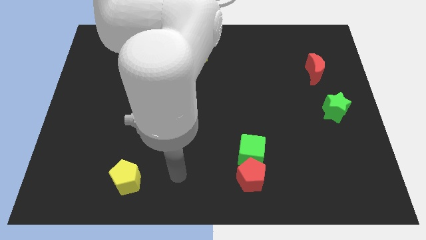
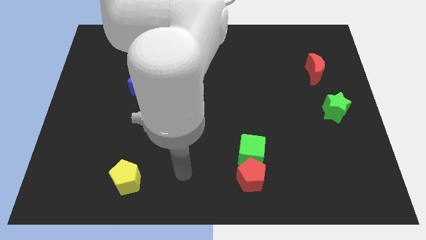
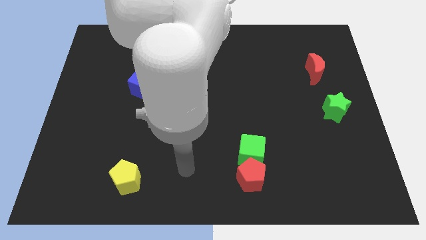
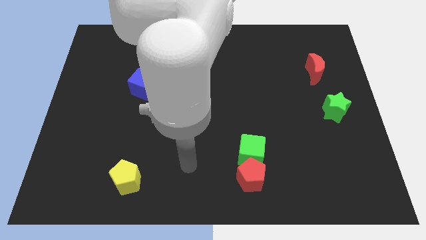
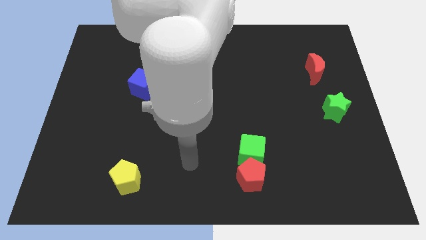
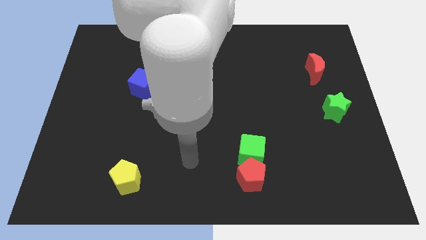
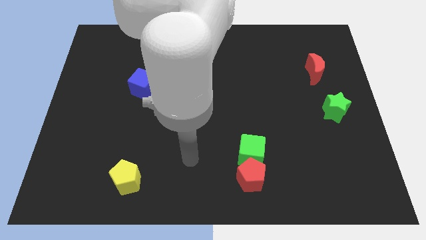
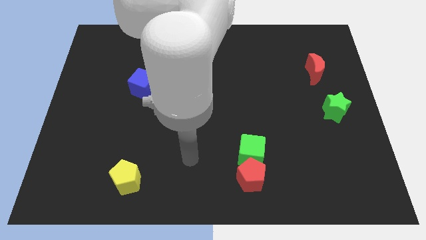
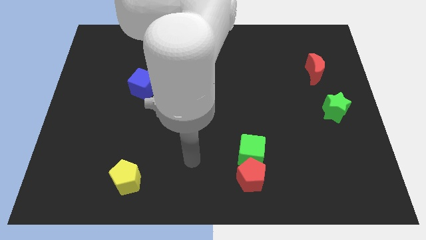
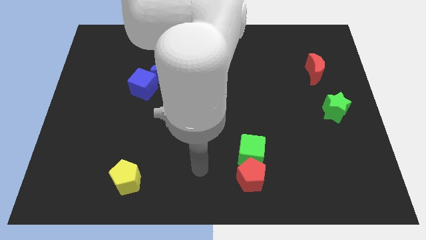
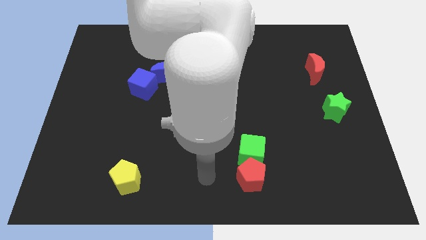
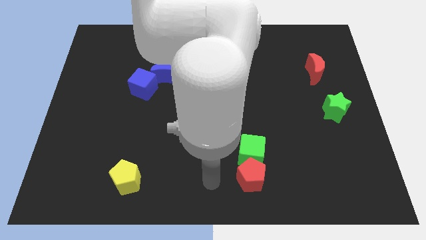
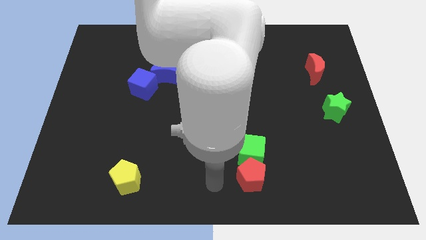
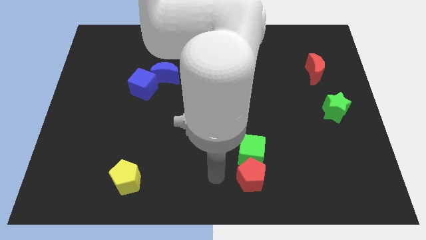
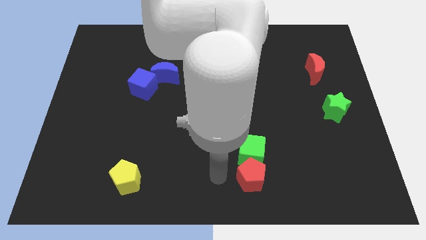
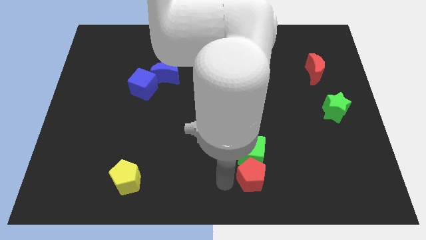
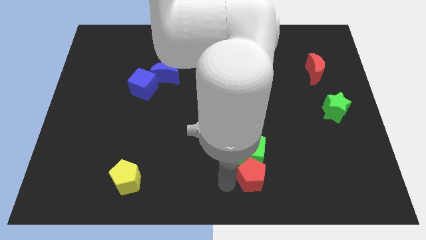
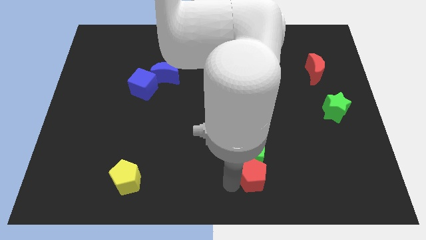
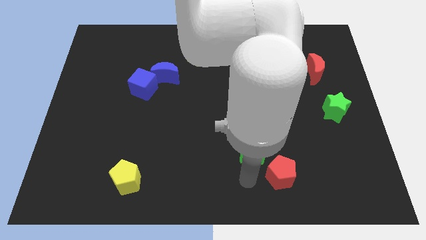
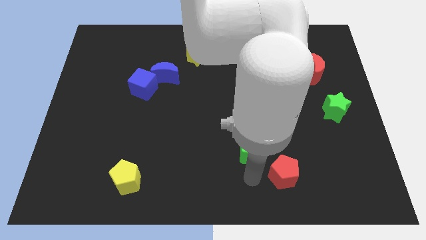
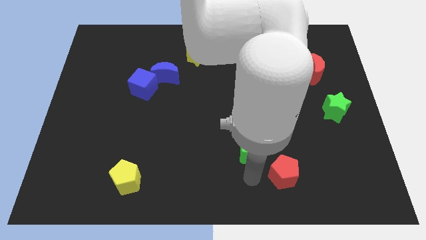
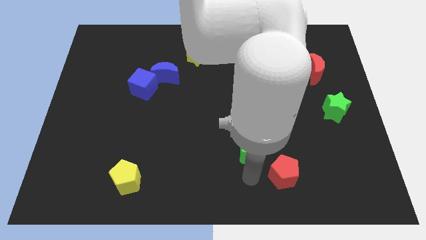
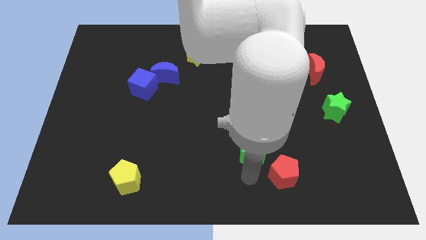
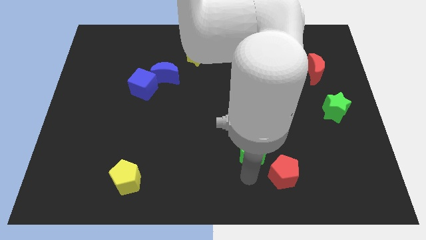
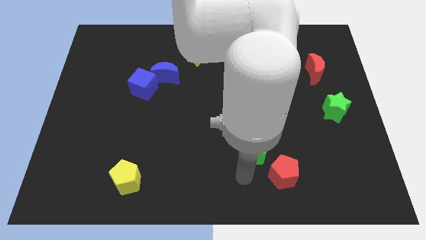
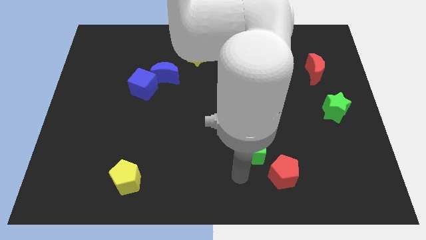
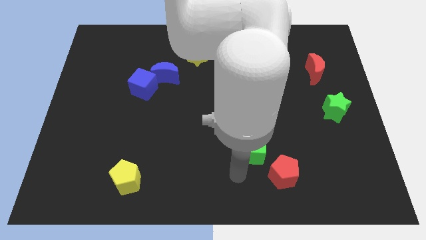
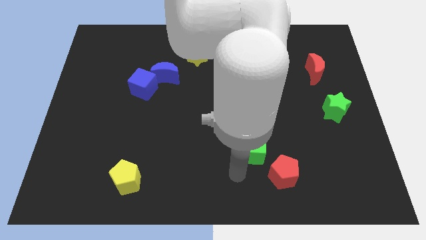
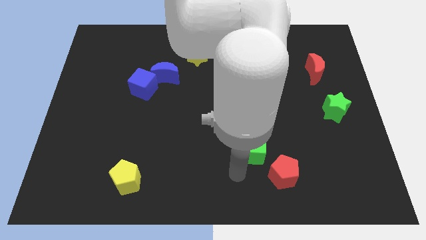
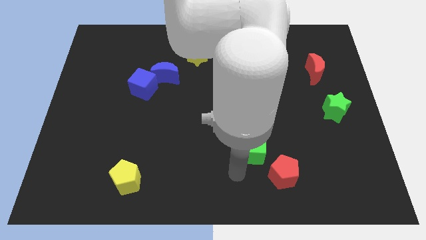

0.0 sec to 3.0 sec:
move the red pentagon from green cube

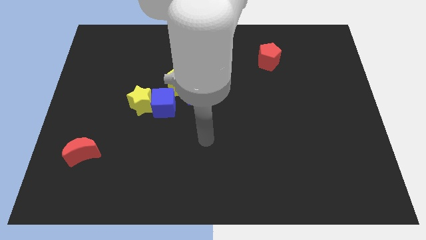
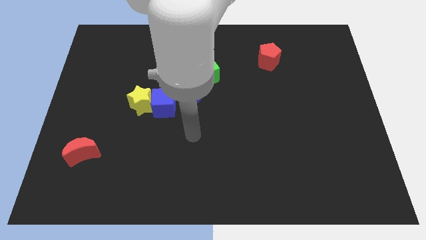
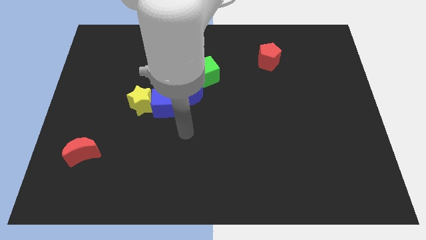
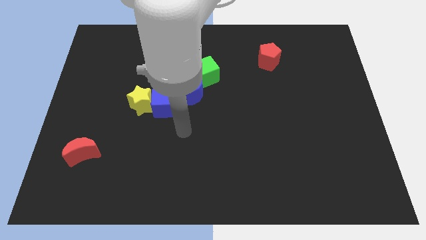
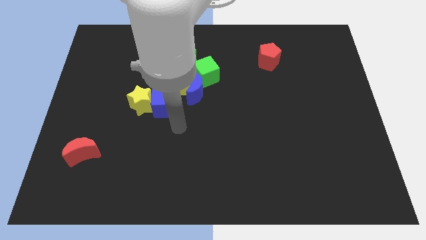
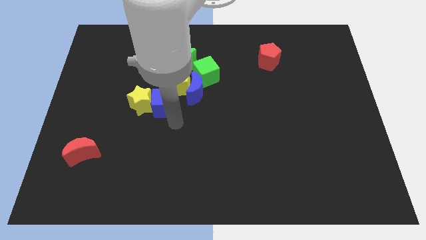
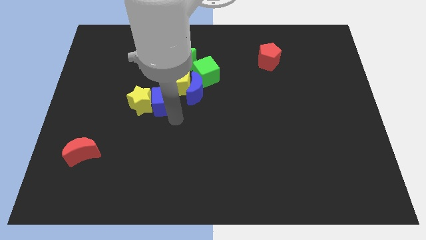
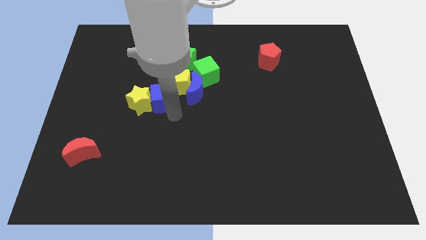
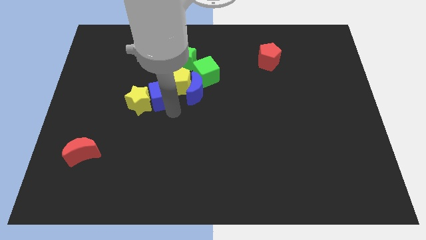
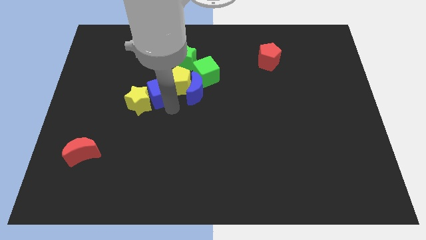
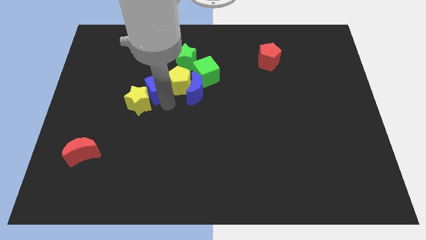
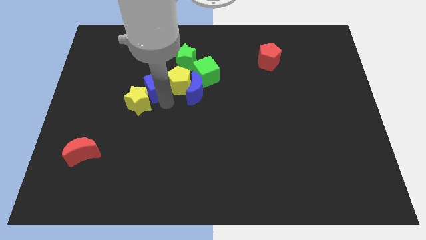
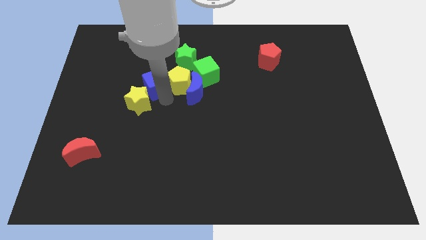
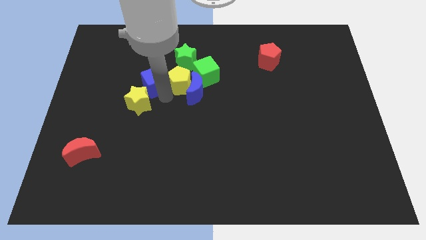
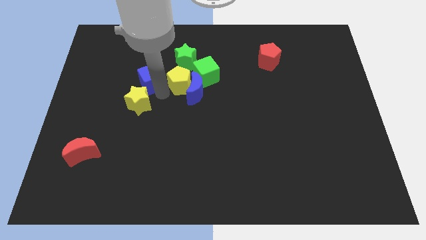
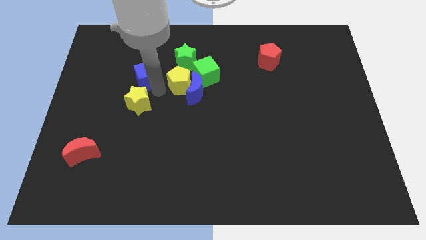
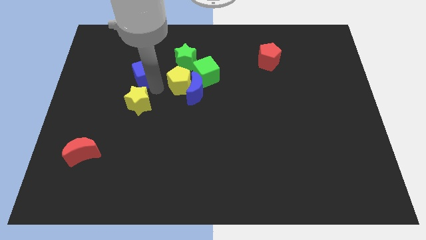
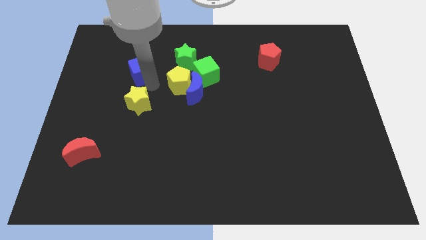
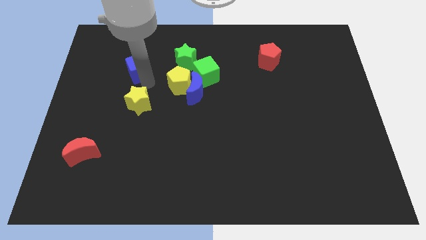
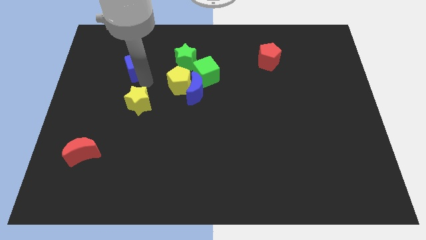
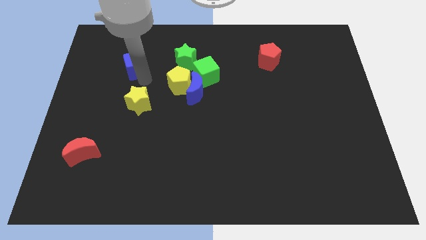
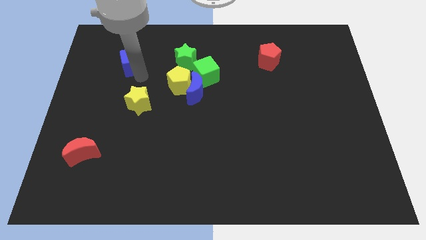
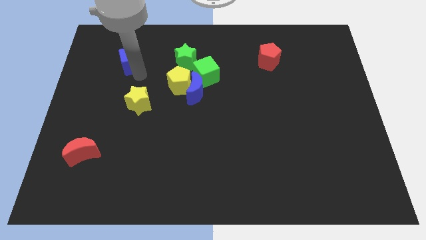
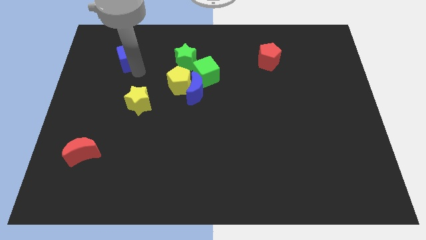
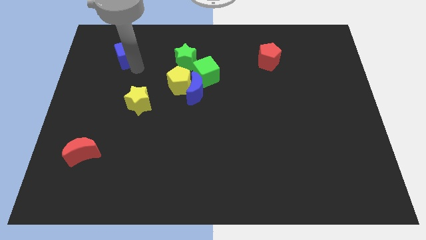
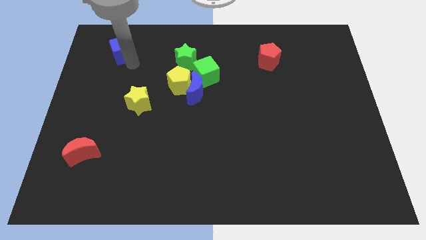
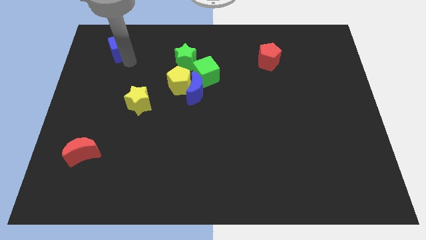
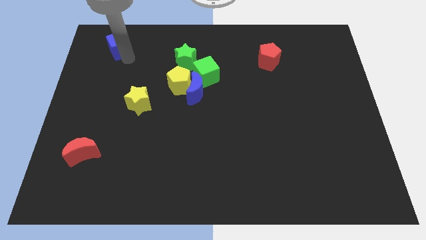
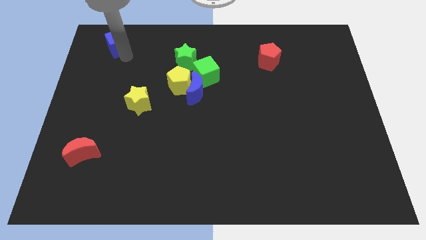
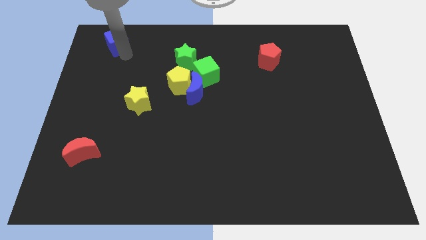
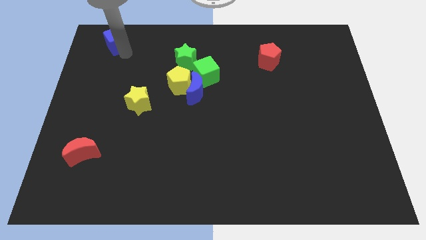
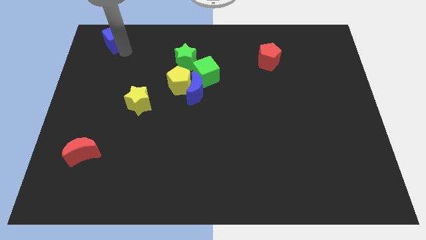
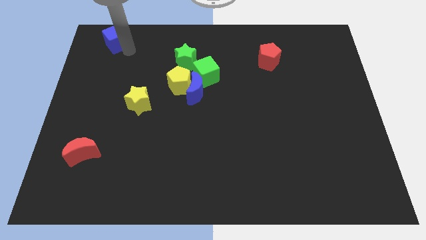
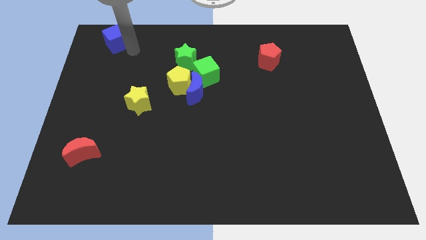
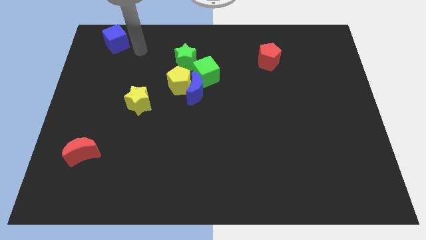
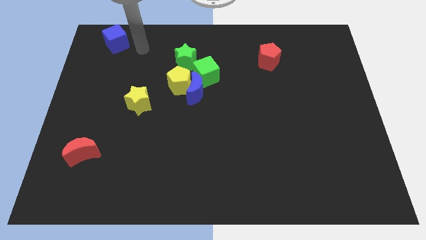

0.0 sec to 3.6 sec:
slide blue cube towards top left

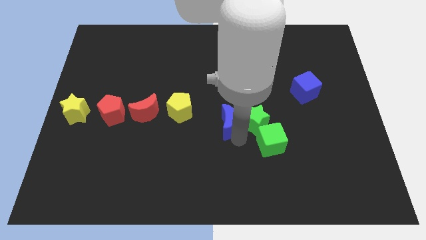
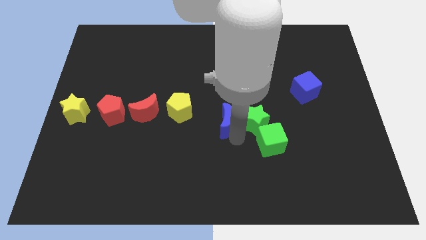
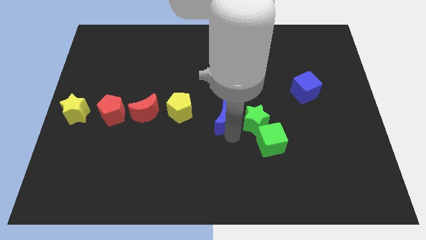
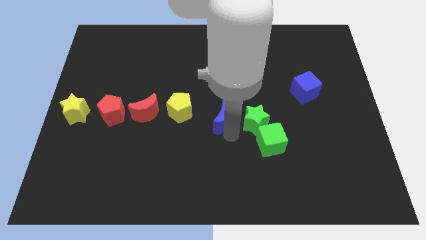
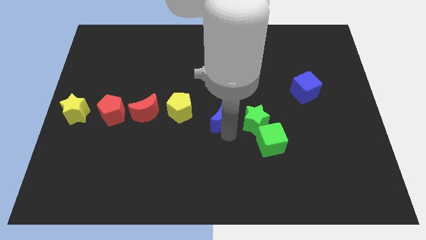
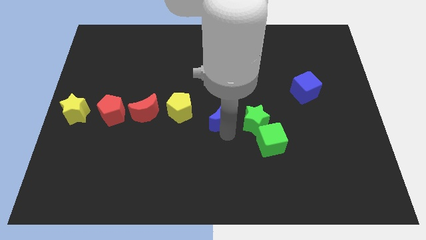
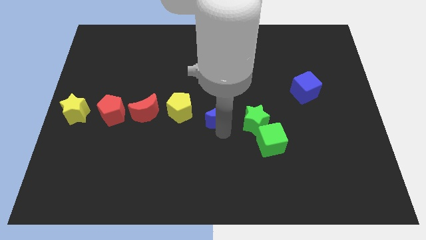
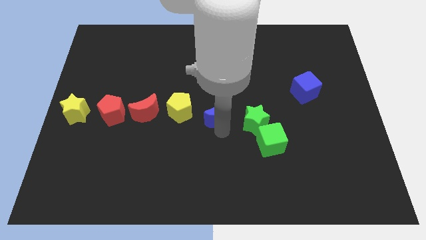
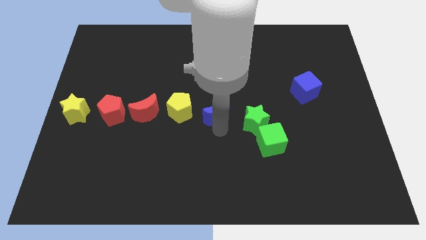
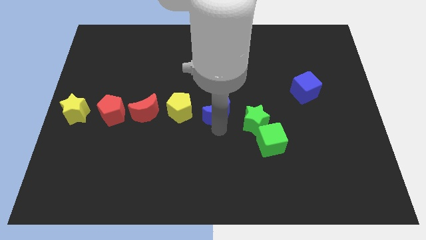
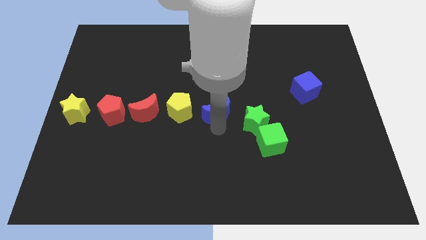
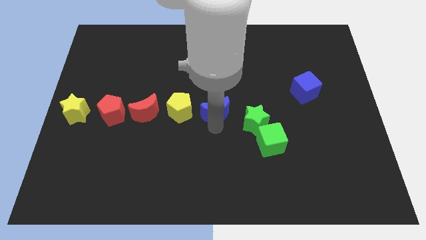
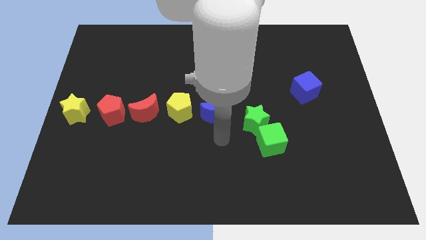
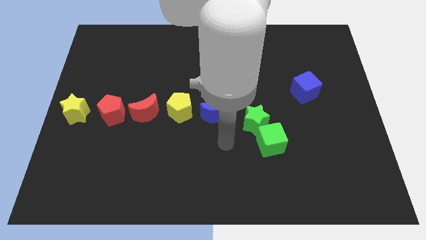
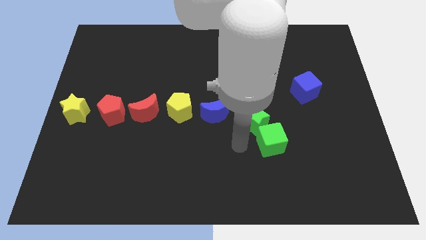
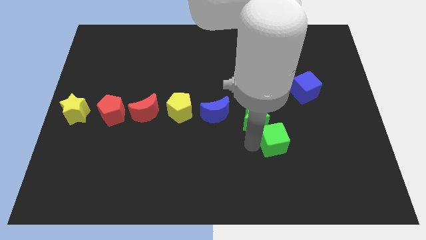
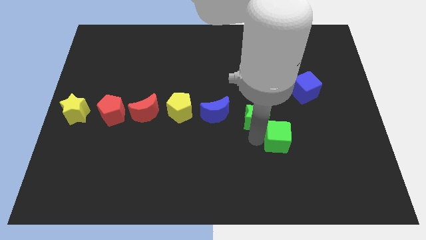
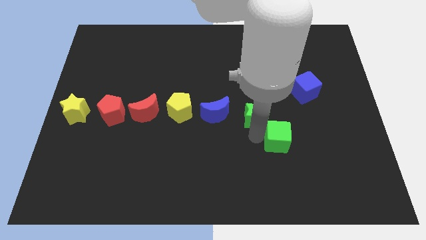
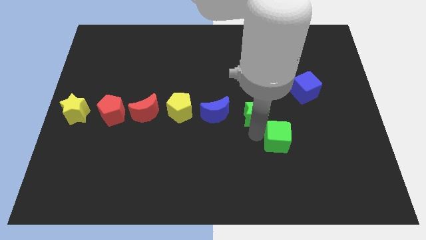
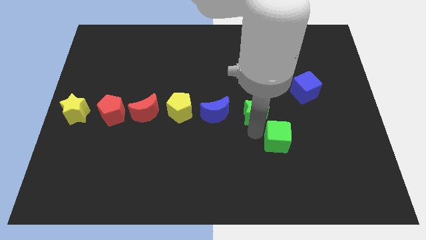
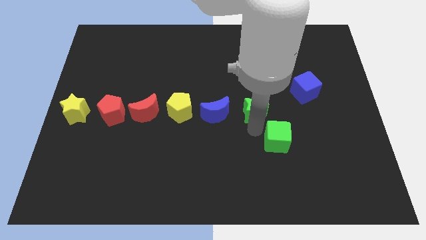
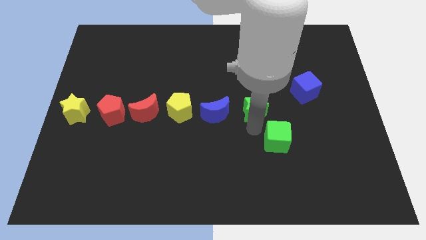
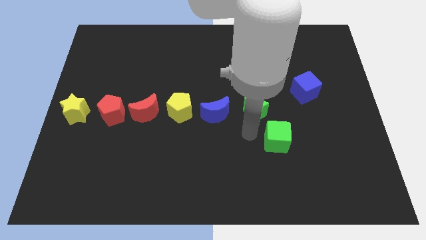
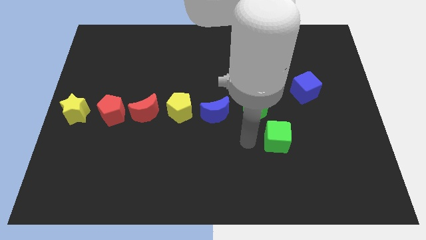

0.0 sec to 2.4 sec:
place green star beside blue crescent
